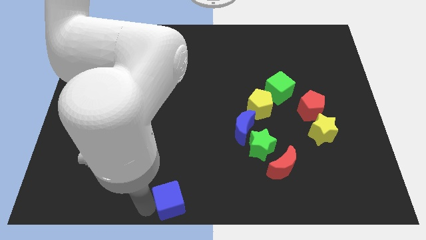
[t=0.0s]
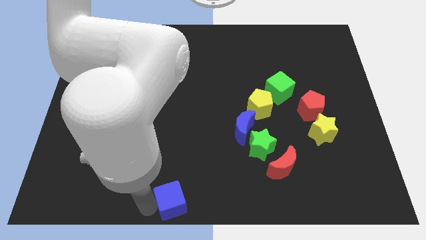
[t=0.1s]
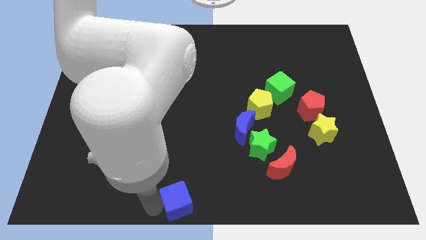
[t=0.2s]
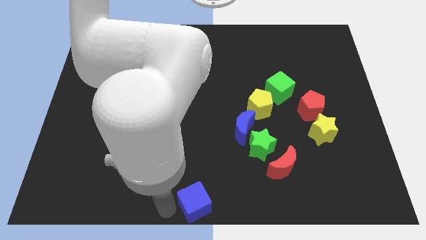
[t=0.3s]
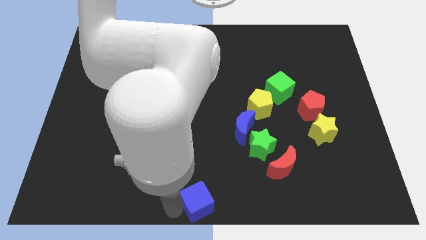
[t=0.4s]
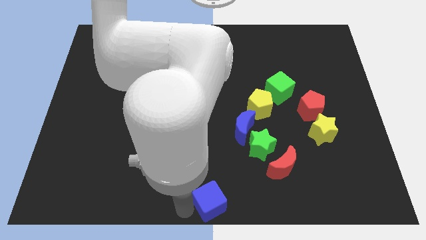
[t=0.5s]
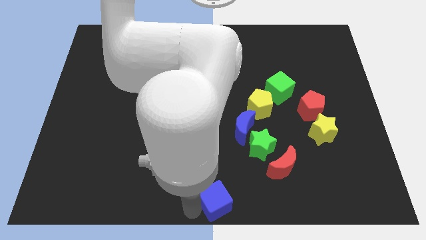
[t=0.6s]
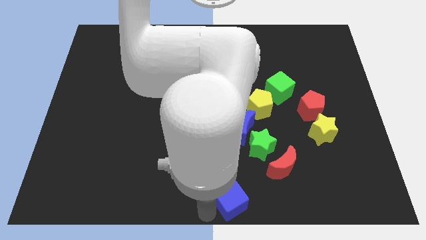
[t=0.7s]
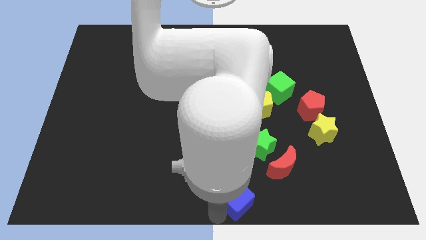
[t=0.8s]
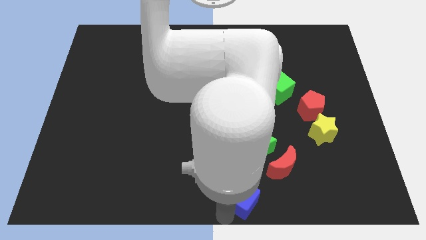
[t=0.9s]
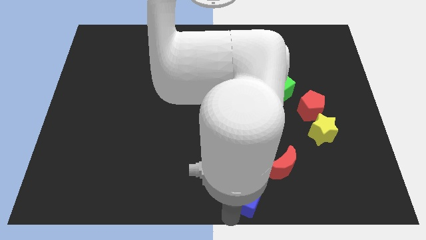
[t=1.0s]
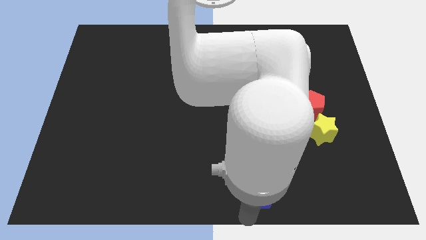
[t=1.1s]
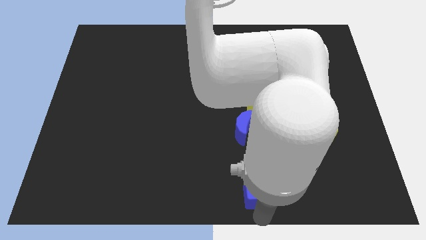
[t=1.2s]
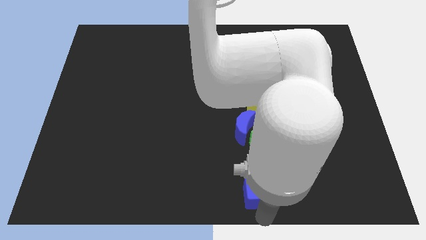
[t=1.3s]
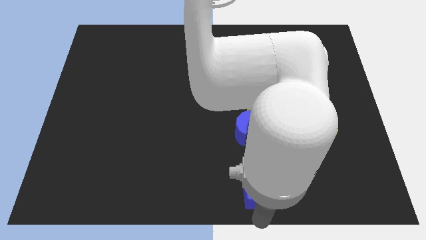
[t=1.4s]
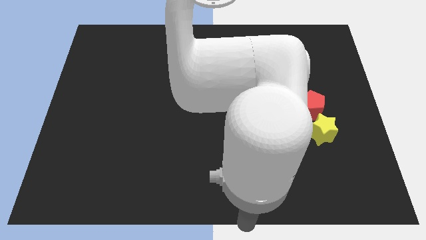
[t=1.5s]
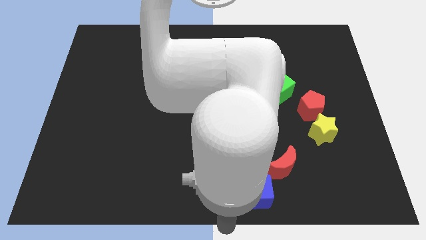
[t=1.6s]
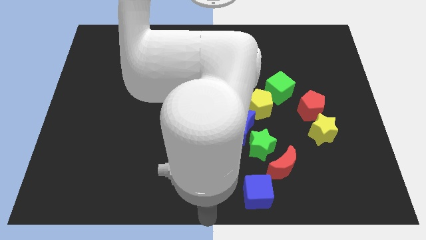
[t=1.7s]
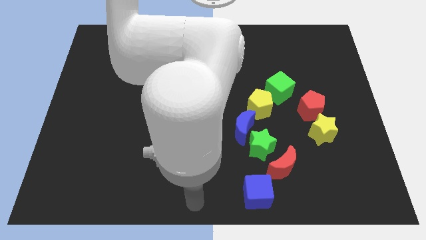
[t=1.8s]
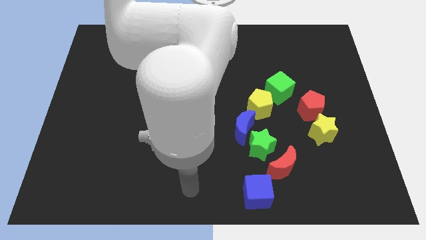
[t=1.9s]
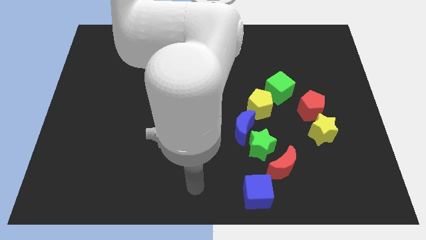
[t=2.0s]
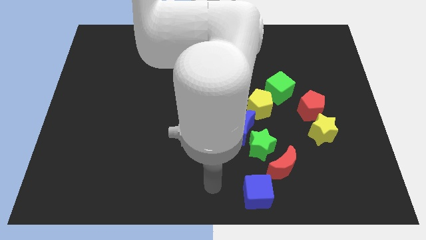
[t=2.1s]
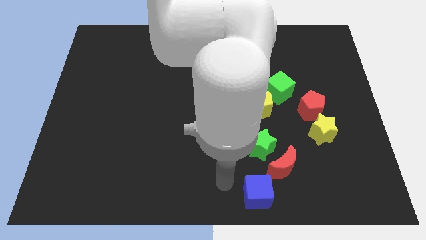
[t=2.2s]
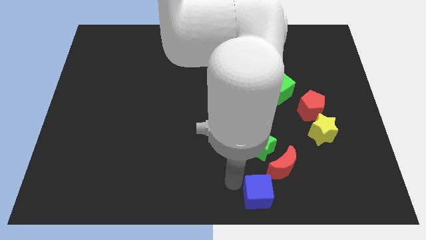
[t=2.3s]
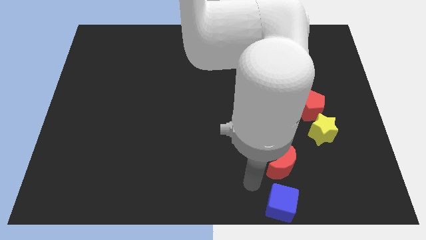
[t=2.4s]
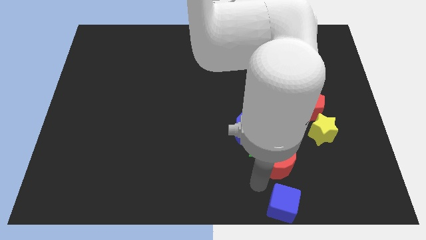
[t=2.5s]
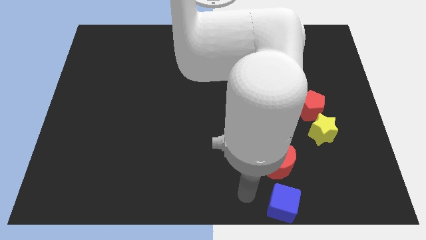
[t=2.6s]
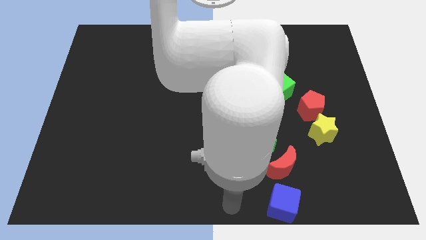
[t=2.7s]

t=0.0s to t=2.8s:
place the blue cube below the red moon

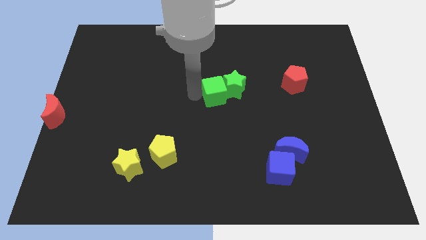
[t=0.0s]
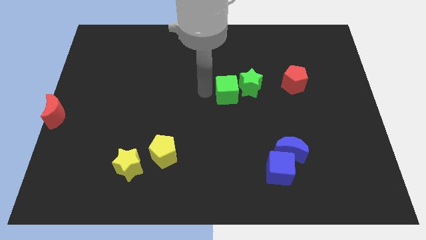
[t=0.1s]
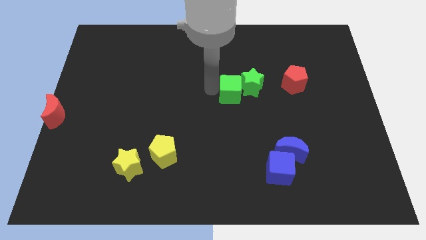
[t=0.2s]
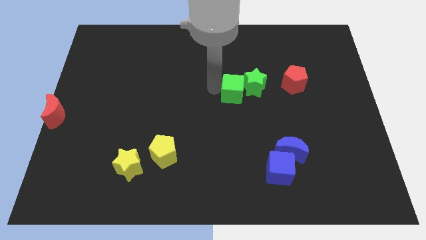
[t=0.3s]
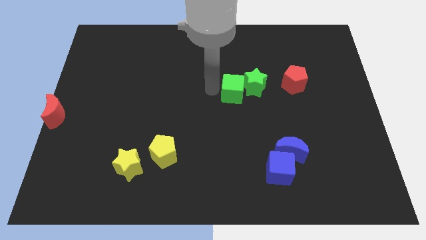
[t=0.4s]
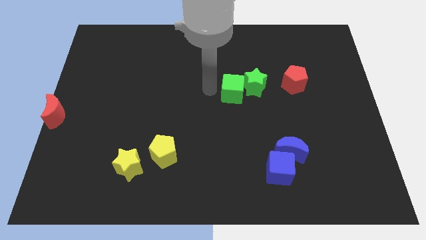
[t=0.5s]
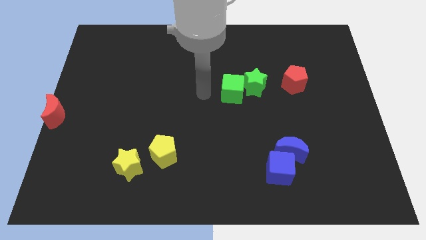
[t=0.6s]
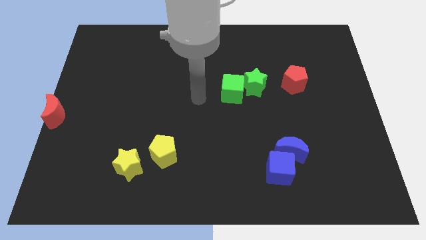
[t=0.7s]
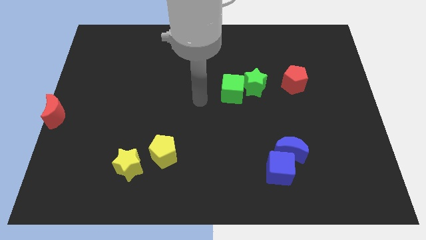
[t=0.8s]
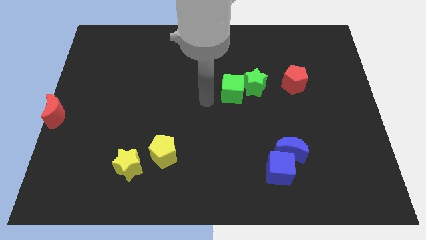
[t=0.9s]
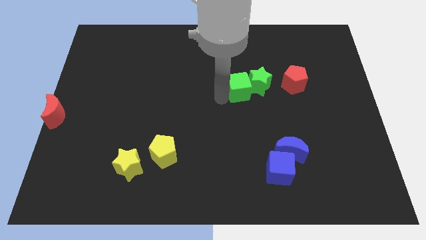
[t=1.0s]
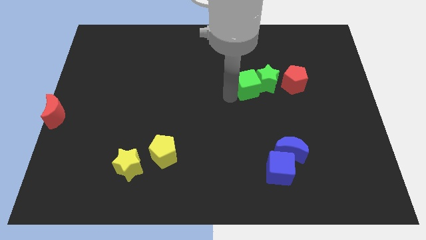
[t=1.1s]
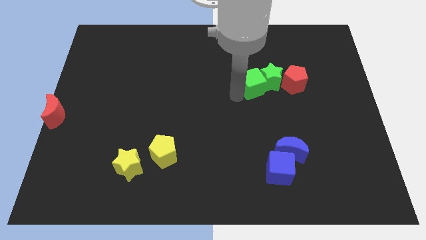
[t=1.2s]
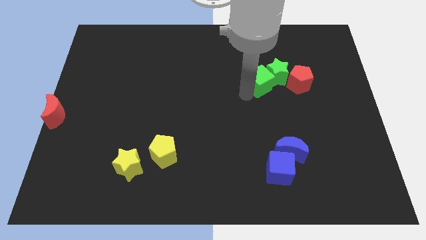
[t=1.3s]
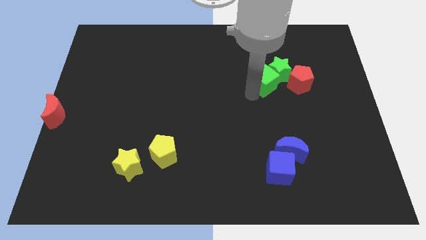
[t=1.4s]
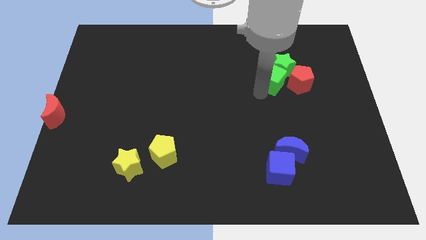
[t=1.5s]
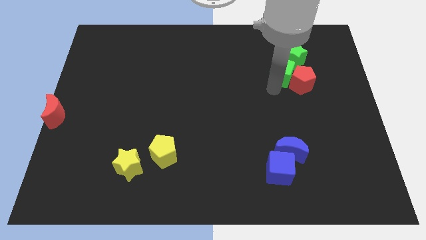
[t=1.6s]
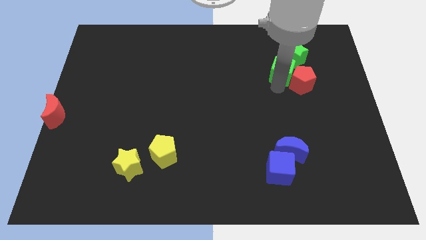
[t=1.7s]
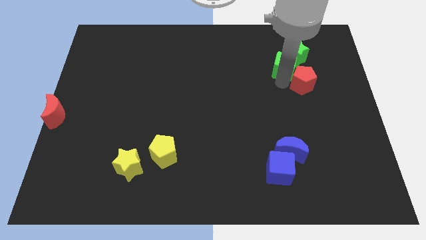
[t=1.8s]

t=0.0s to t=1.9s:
push green cube into red pentagon

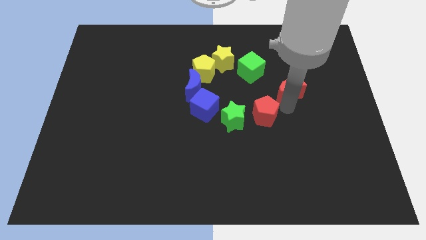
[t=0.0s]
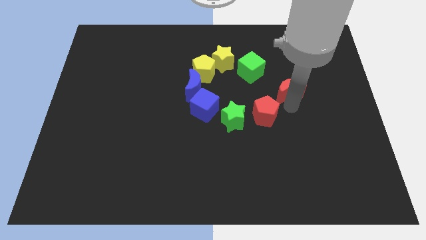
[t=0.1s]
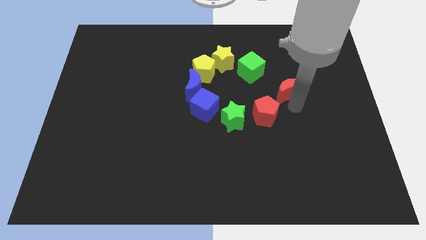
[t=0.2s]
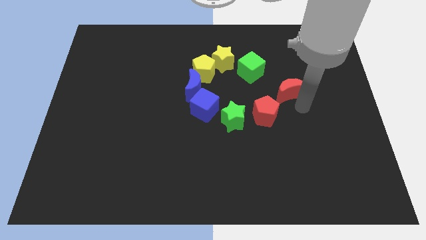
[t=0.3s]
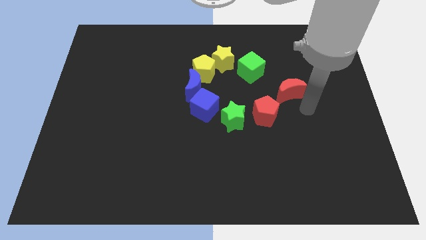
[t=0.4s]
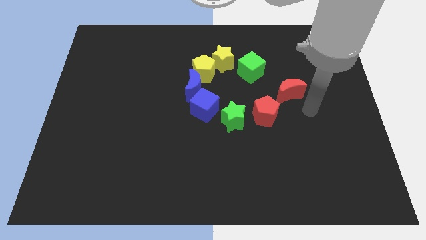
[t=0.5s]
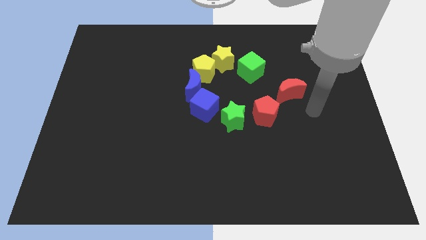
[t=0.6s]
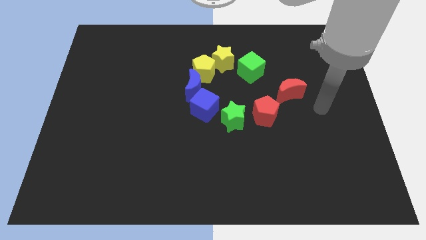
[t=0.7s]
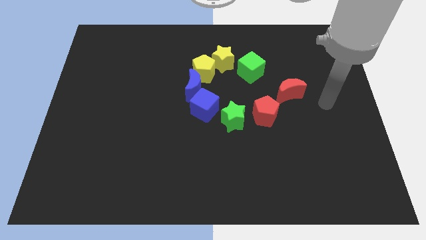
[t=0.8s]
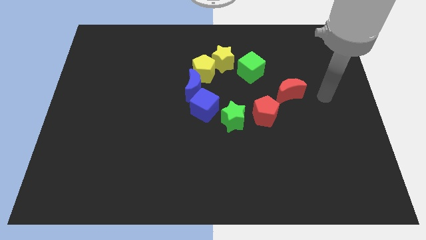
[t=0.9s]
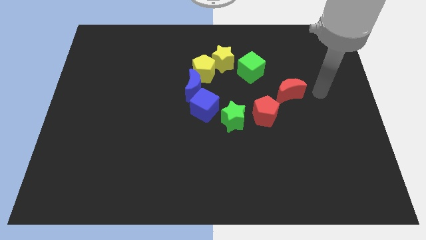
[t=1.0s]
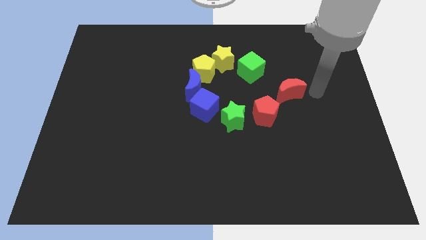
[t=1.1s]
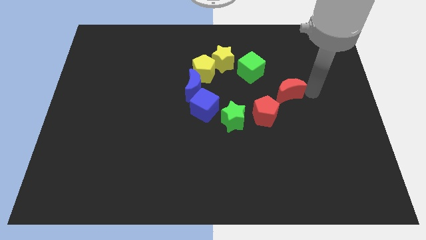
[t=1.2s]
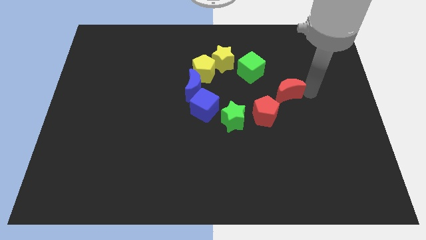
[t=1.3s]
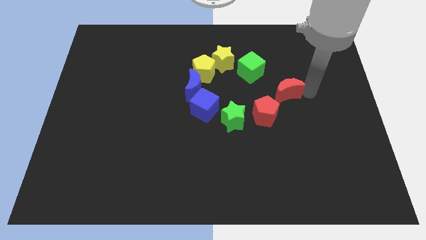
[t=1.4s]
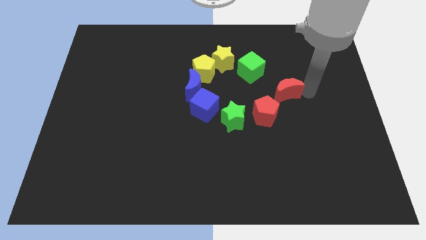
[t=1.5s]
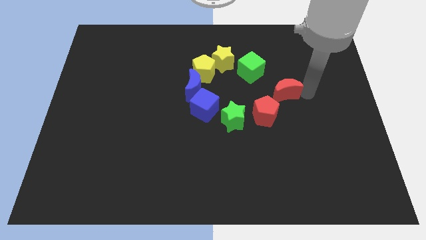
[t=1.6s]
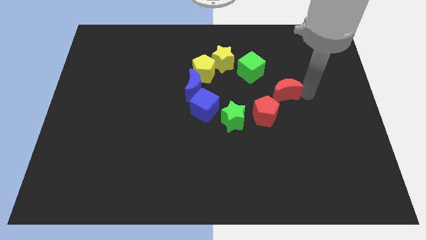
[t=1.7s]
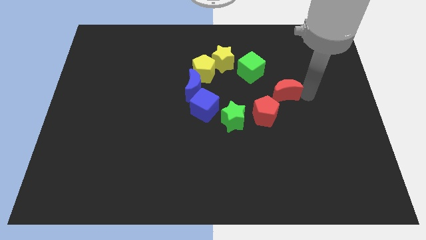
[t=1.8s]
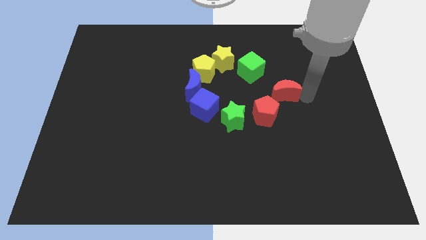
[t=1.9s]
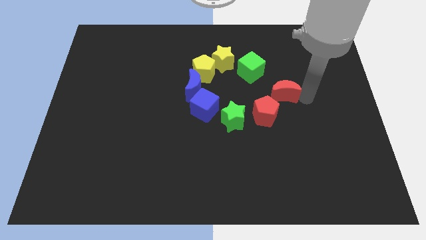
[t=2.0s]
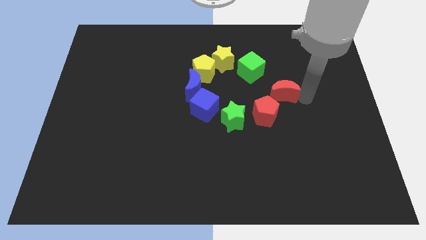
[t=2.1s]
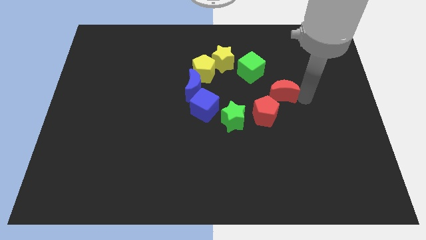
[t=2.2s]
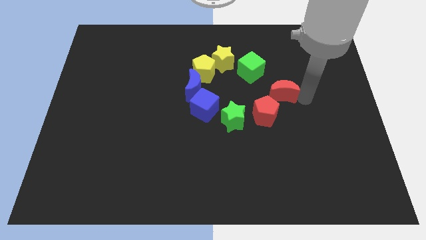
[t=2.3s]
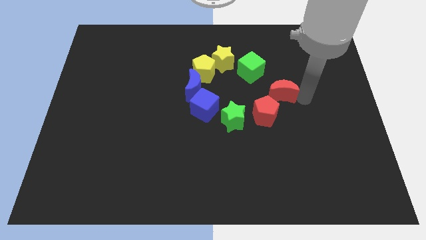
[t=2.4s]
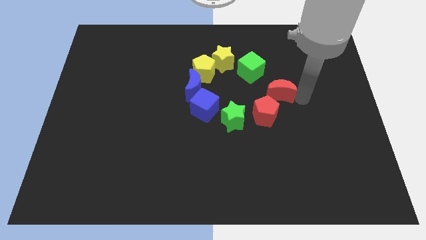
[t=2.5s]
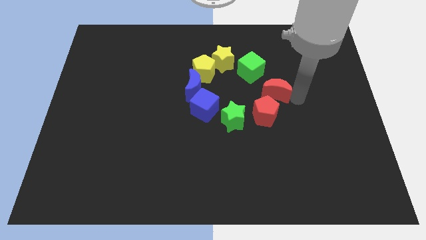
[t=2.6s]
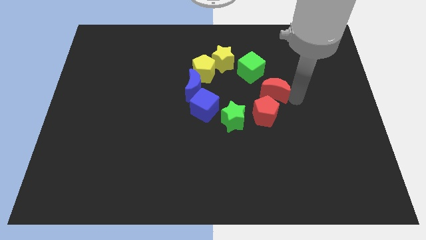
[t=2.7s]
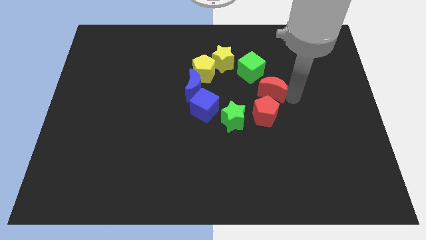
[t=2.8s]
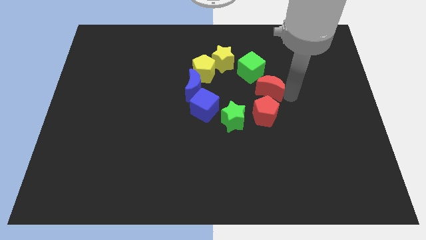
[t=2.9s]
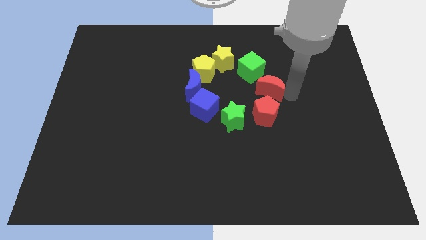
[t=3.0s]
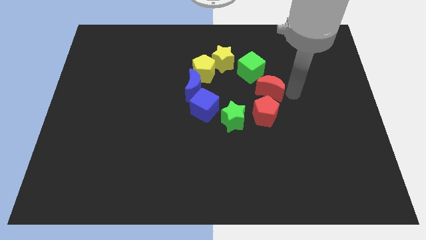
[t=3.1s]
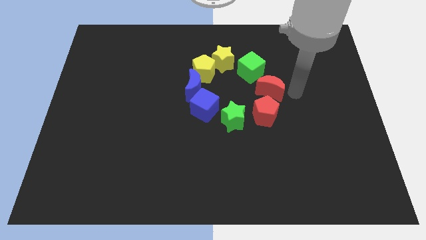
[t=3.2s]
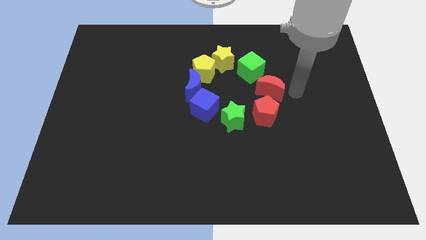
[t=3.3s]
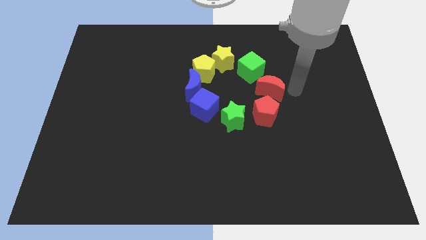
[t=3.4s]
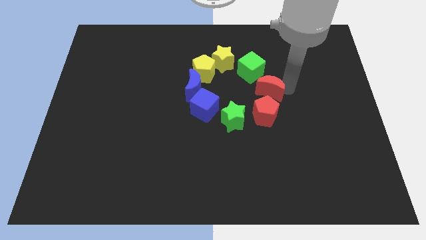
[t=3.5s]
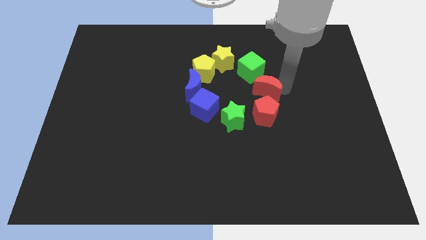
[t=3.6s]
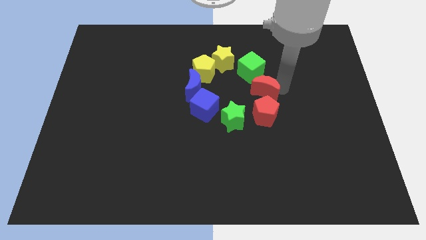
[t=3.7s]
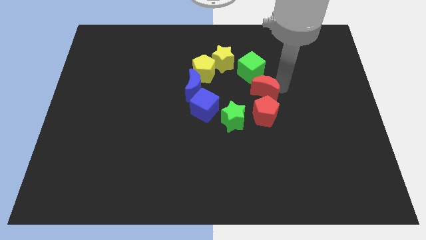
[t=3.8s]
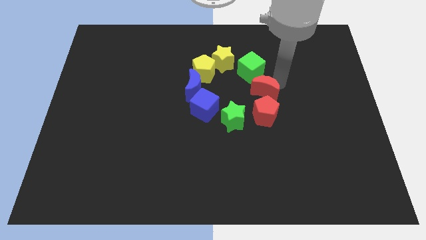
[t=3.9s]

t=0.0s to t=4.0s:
put the red moon above the red pentagon

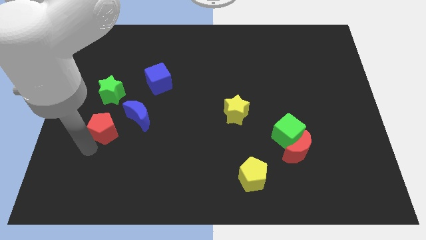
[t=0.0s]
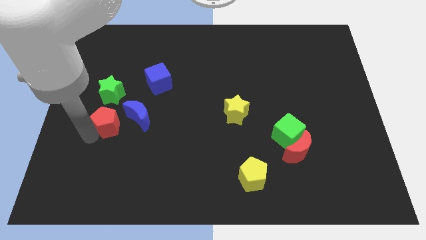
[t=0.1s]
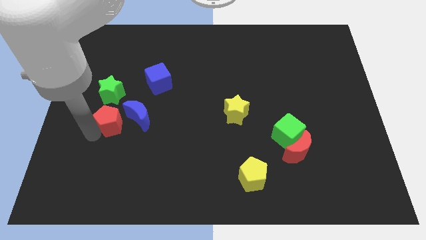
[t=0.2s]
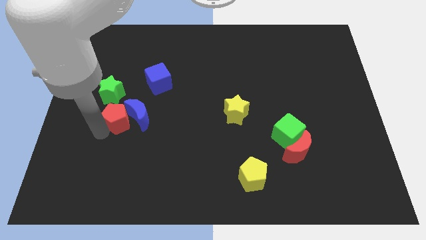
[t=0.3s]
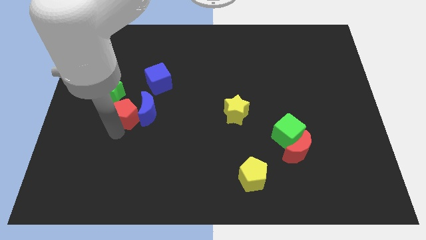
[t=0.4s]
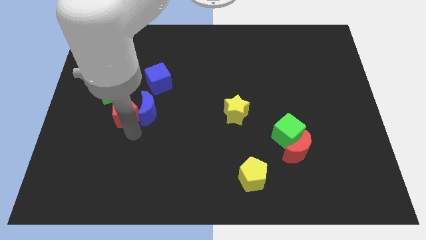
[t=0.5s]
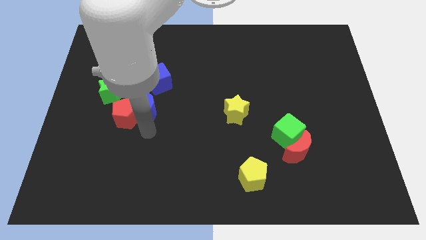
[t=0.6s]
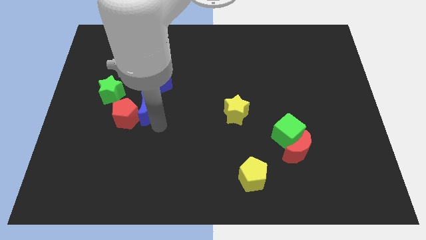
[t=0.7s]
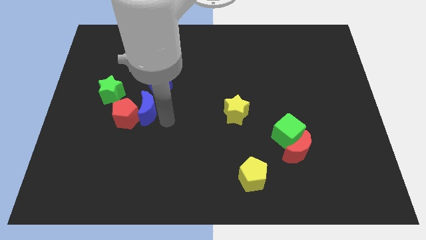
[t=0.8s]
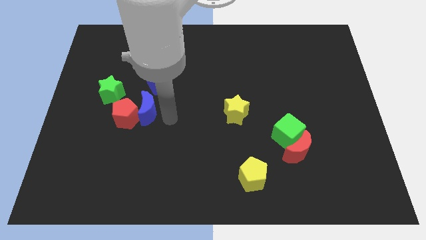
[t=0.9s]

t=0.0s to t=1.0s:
push the red pentagon into the blue crescent
